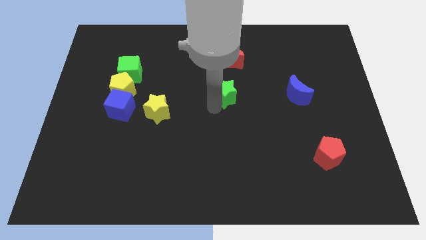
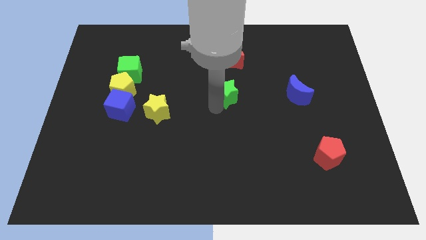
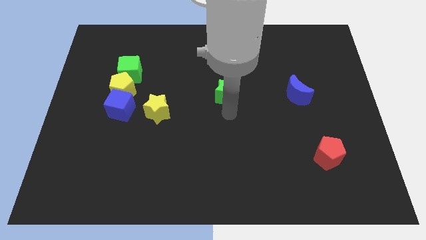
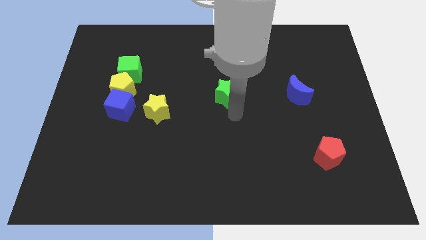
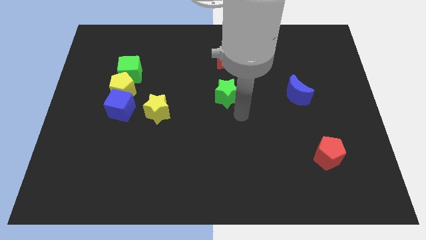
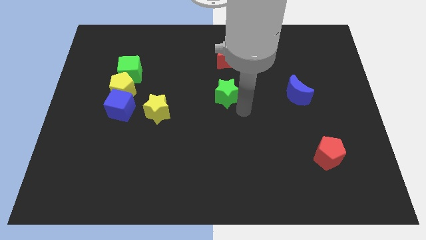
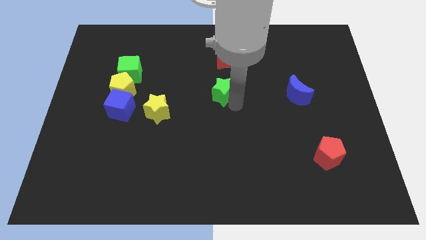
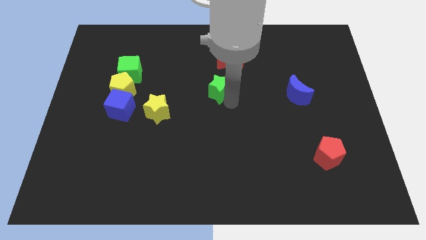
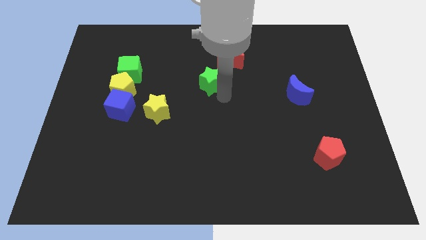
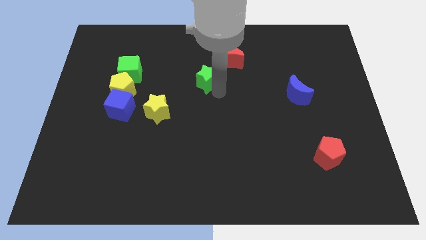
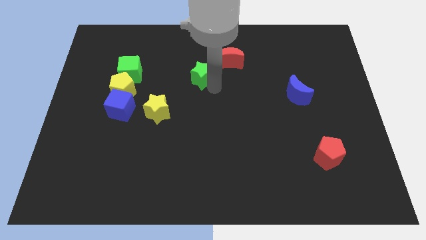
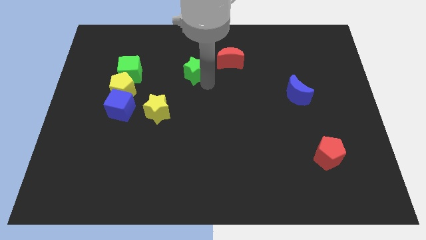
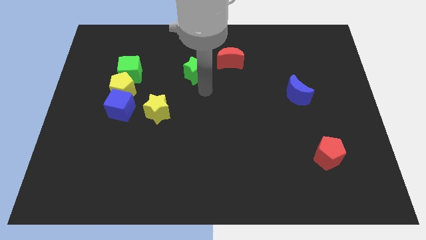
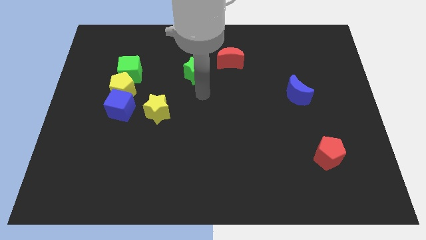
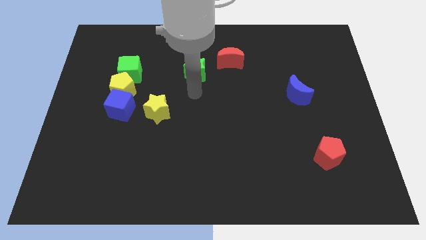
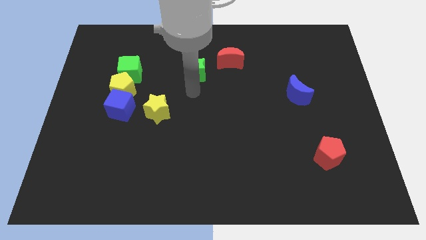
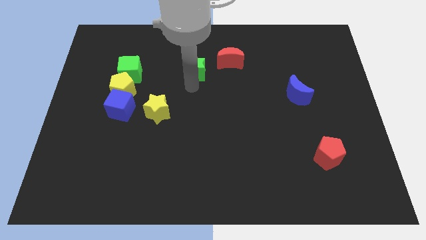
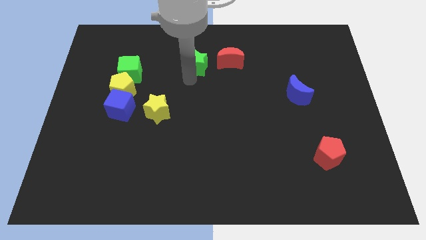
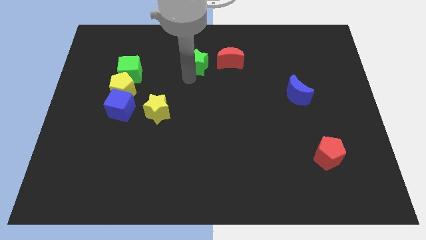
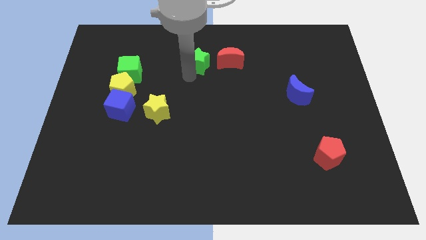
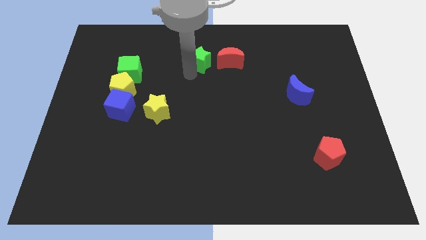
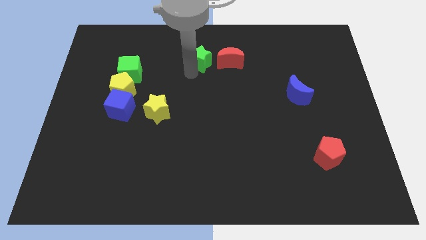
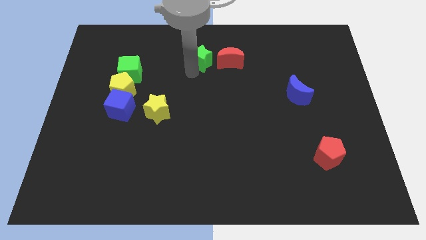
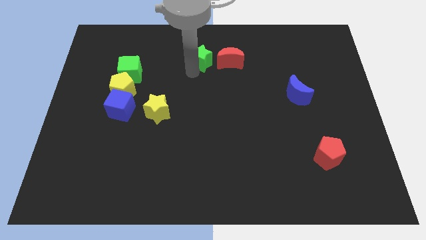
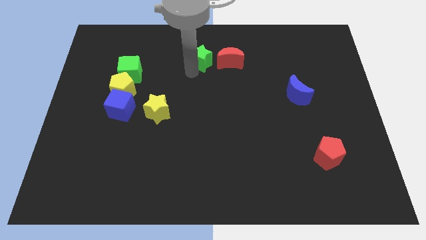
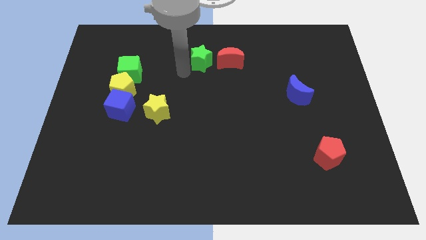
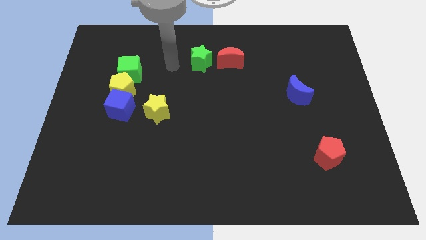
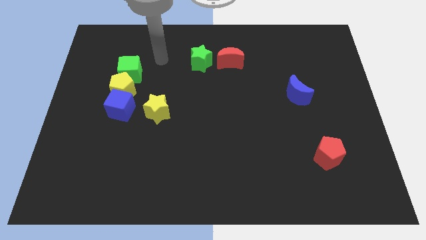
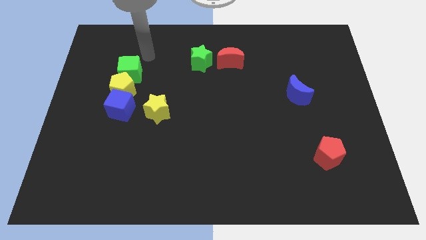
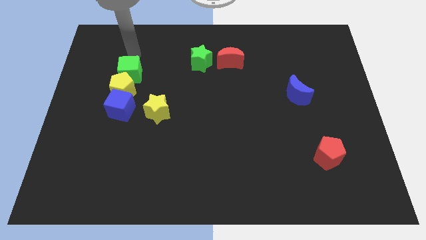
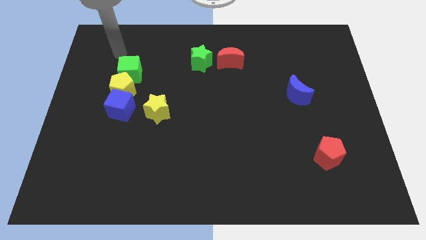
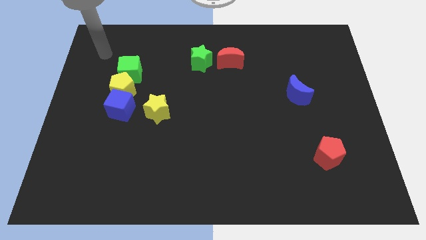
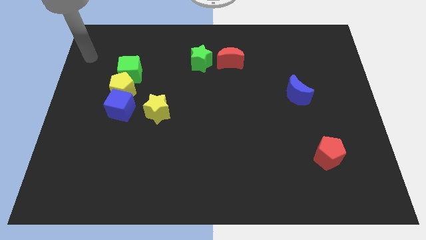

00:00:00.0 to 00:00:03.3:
place green star to the left of red moon

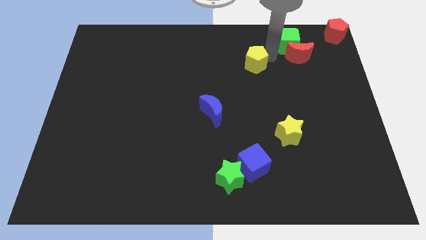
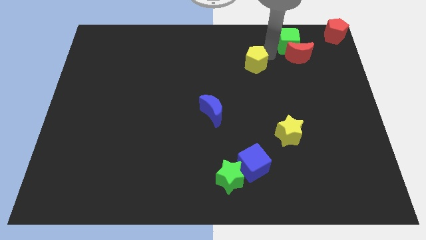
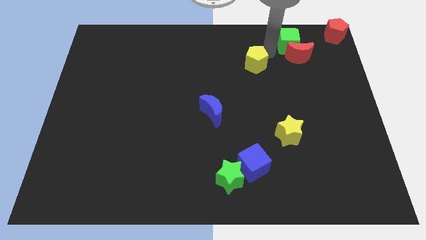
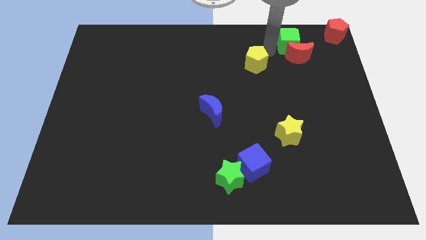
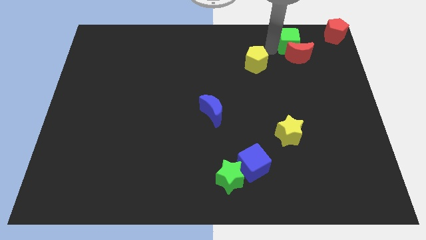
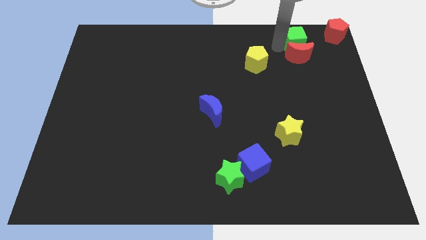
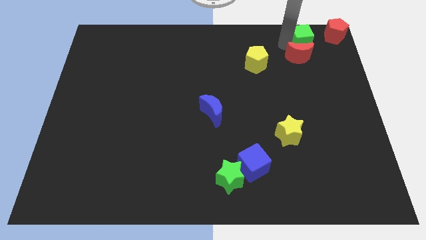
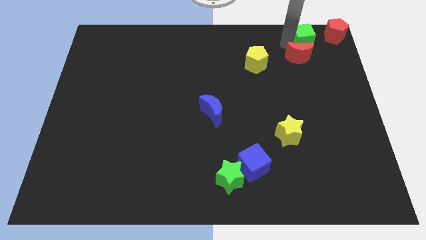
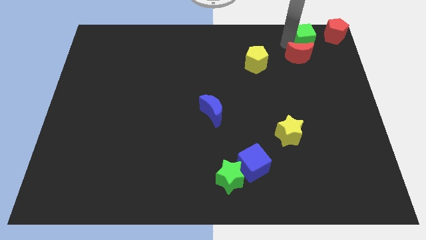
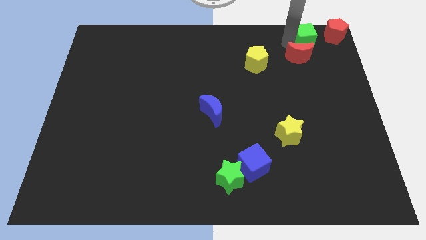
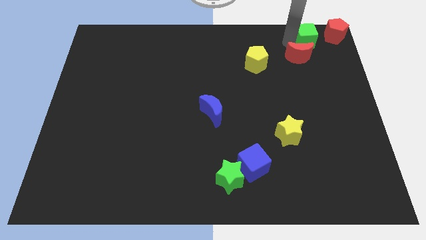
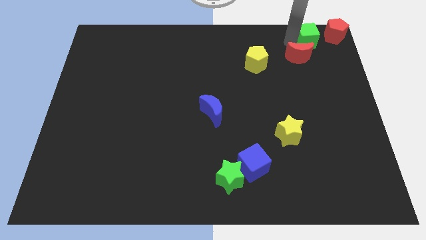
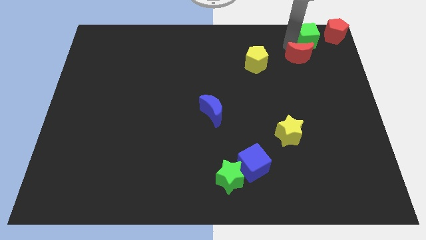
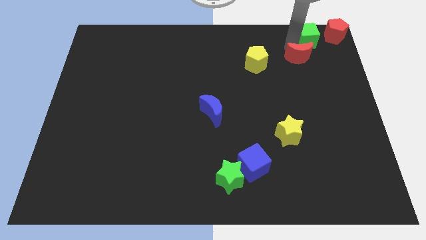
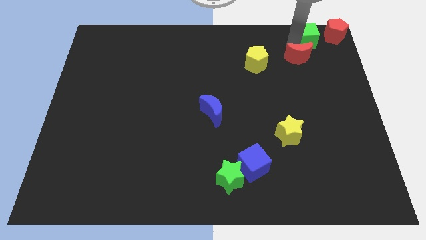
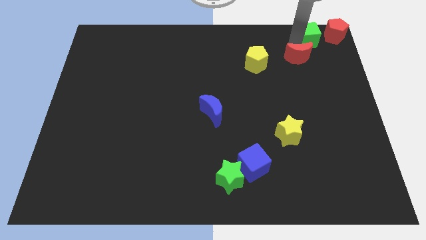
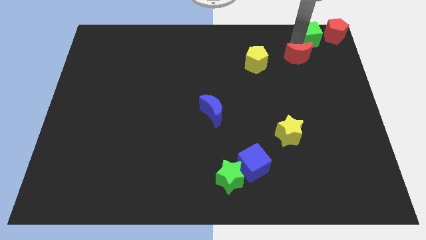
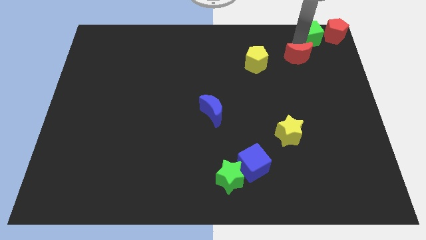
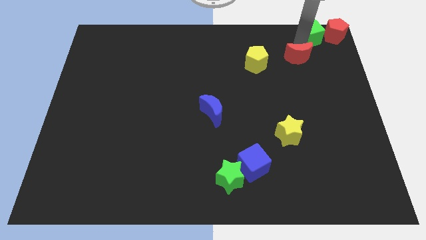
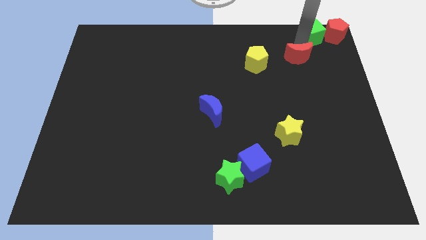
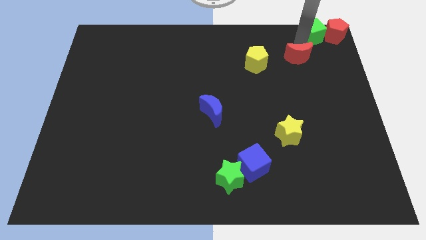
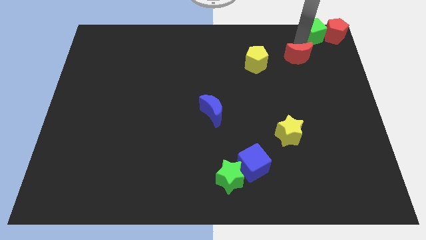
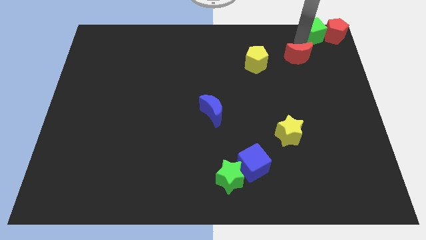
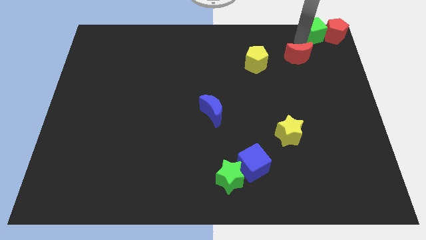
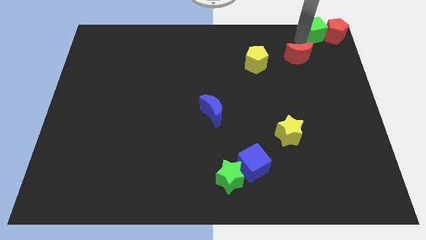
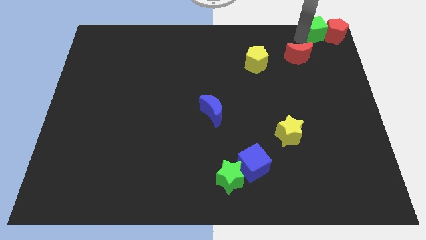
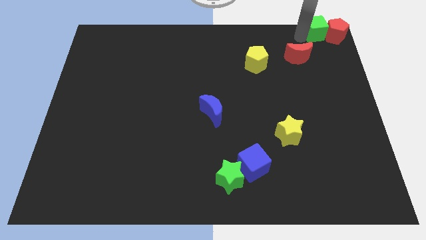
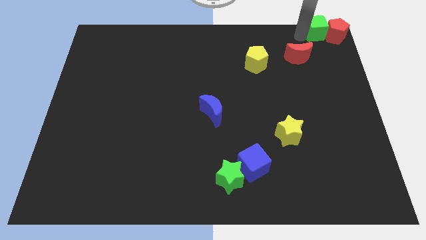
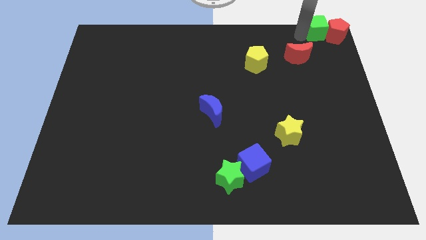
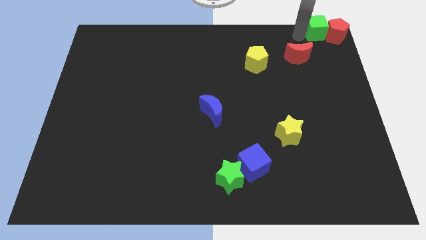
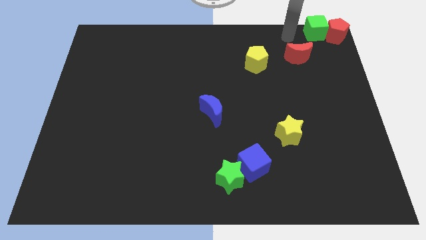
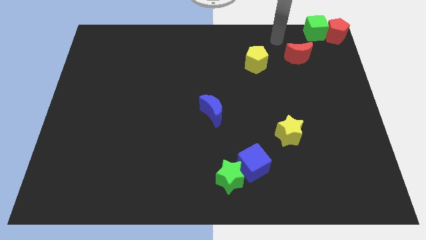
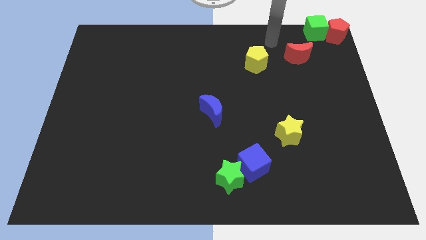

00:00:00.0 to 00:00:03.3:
put the green cube on the left side of the red pentagon

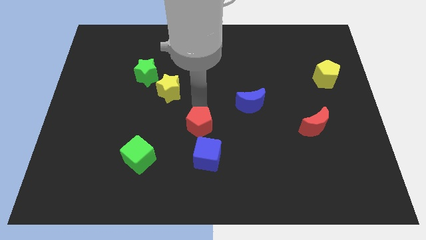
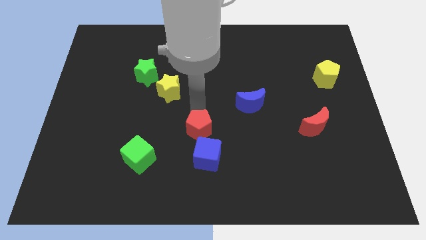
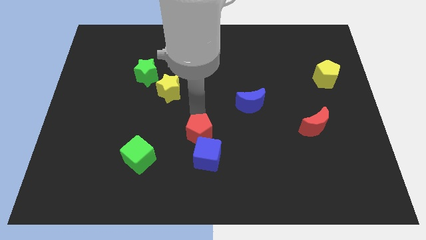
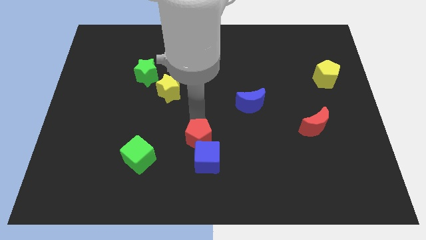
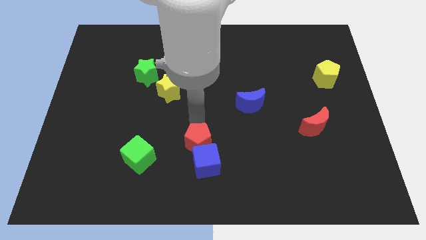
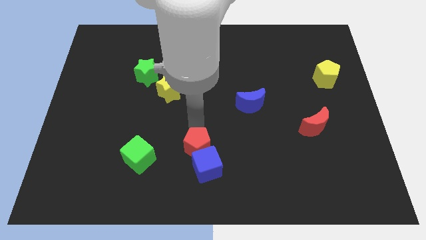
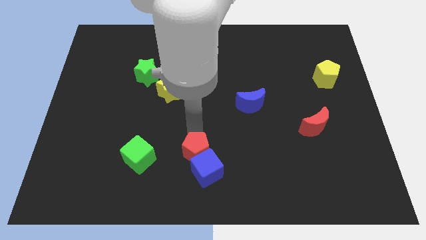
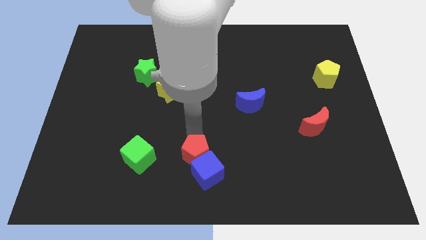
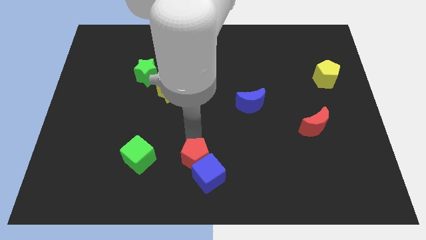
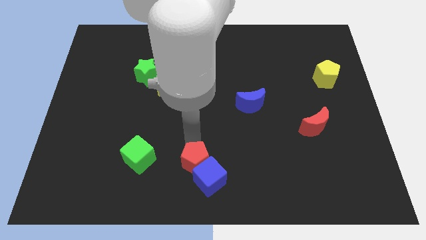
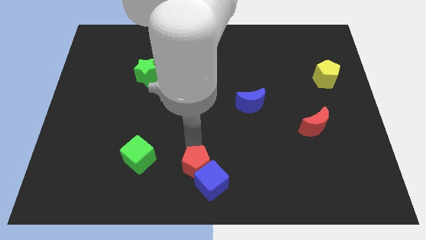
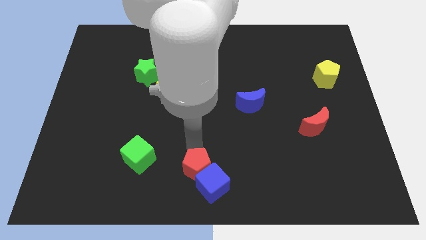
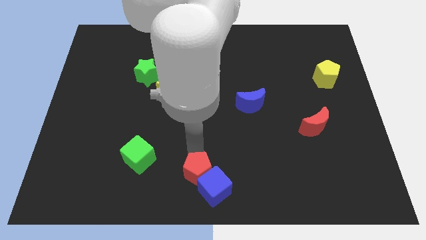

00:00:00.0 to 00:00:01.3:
push the red pentagon and blue cube towards the bottom

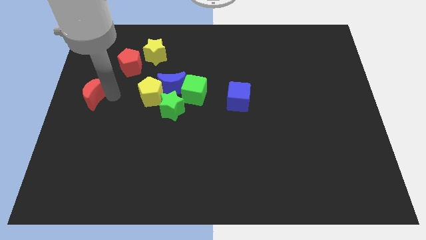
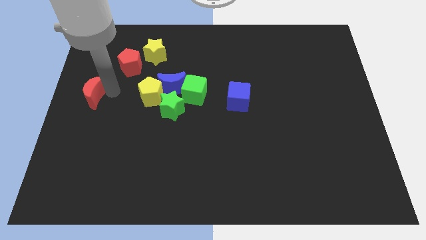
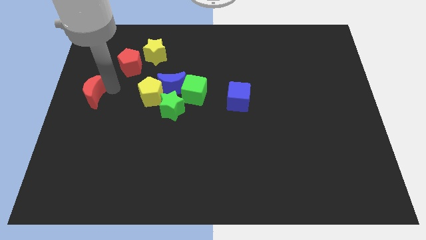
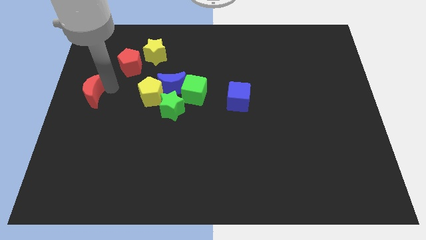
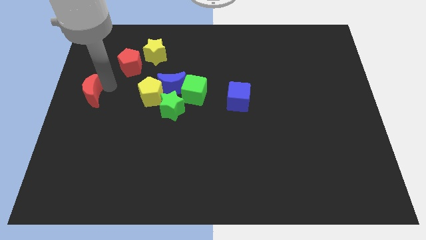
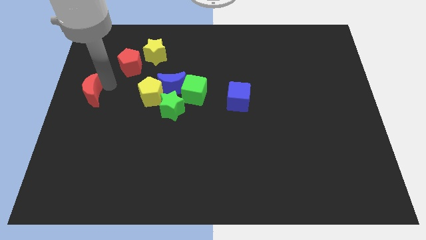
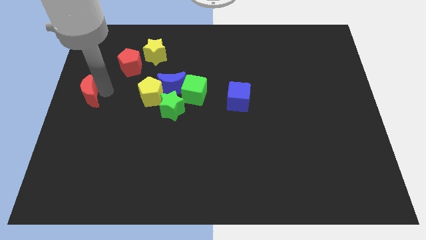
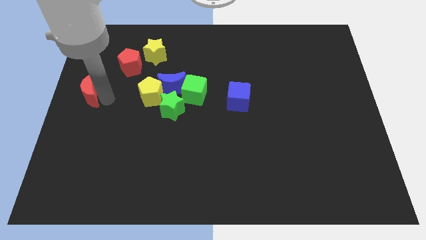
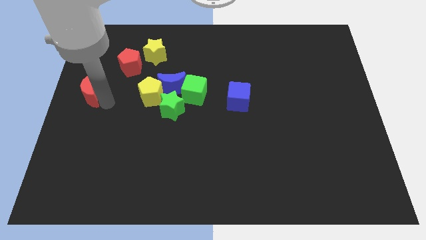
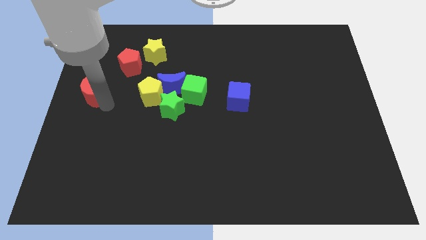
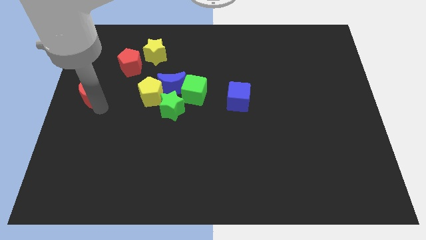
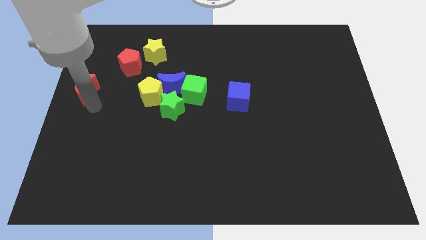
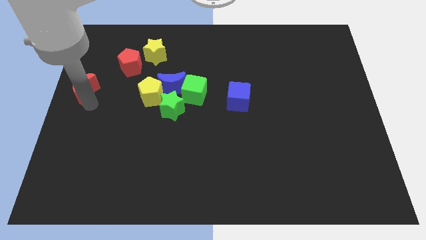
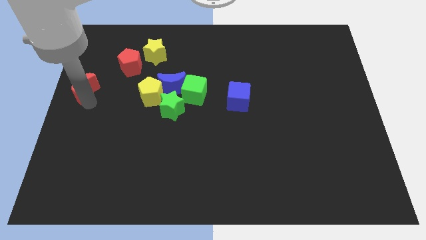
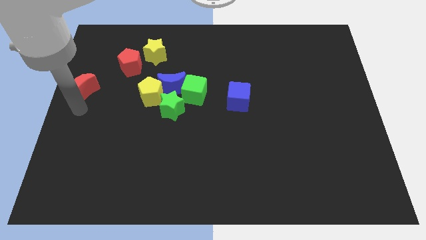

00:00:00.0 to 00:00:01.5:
move the red crescent diagonally to the bottom left side of the red pentagon
